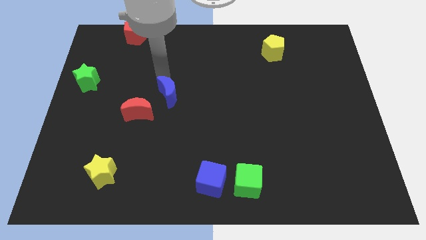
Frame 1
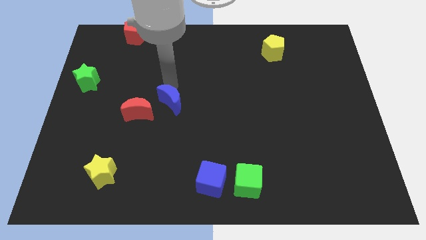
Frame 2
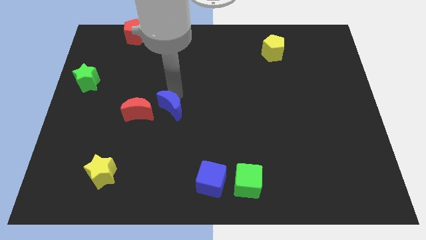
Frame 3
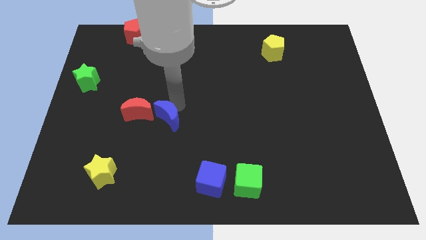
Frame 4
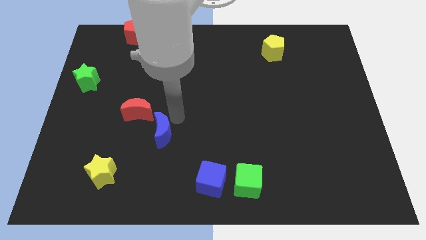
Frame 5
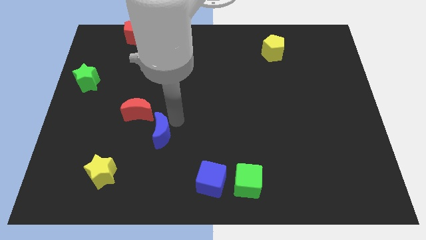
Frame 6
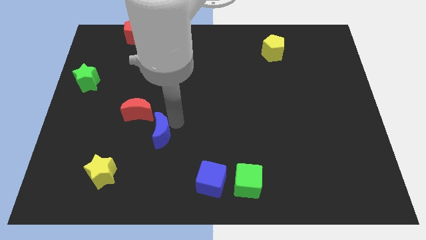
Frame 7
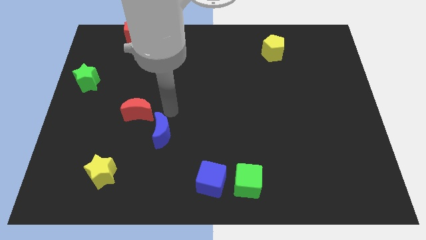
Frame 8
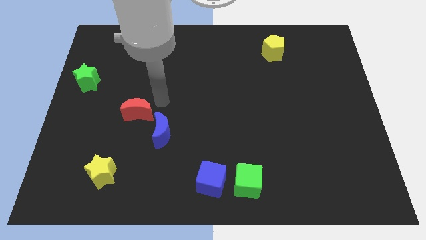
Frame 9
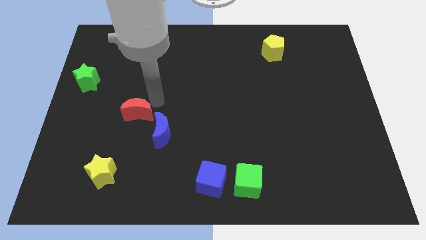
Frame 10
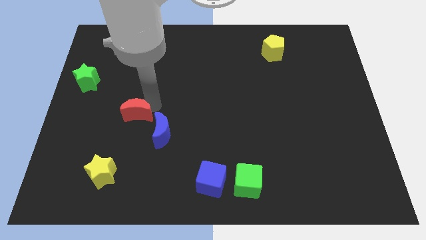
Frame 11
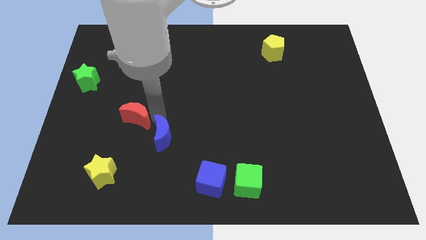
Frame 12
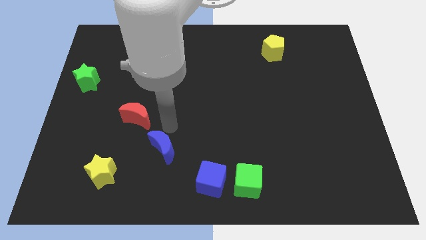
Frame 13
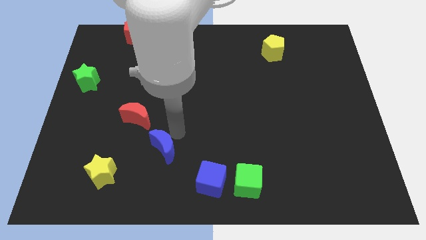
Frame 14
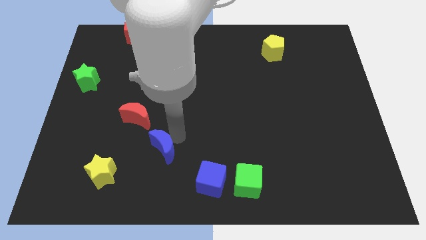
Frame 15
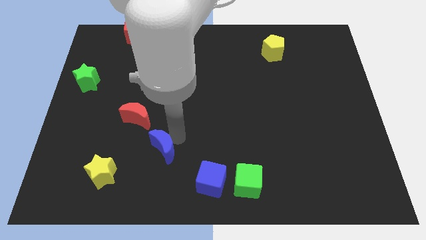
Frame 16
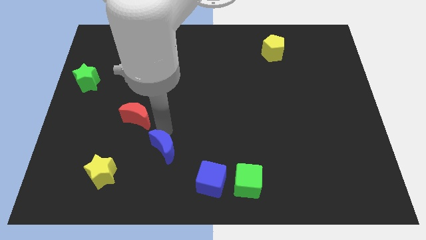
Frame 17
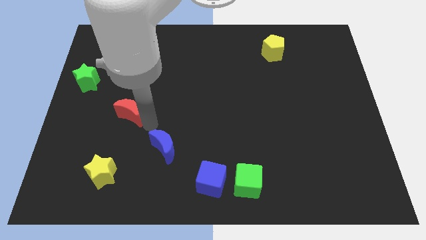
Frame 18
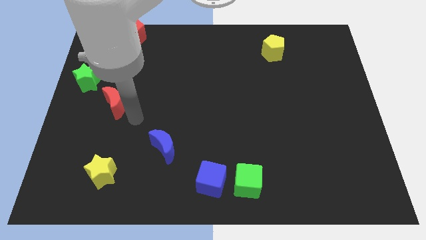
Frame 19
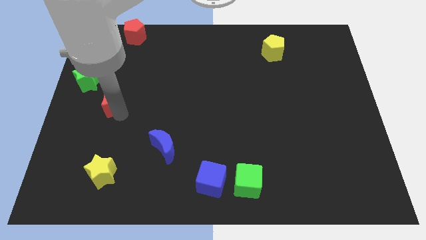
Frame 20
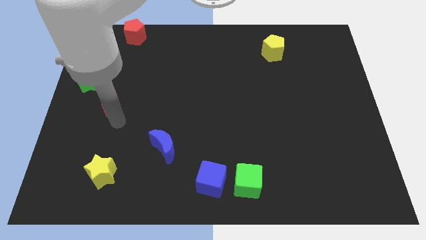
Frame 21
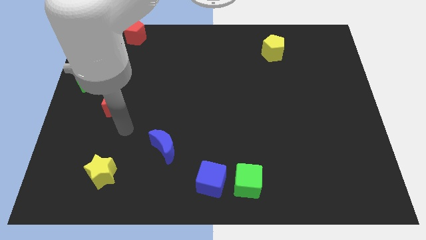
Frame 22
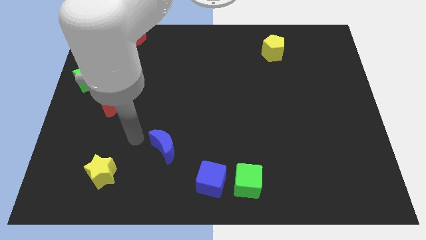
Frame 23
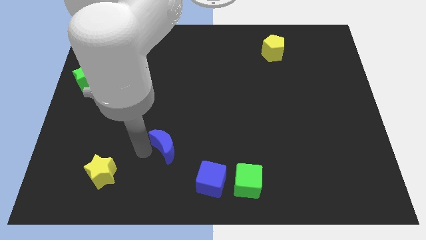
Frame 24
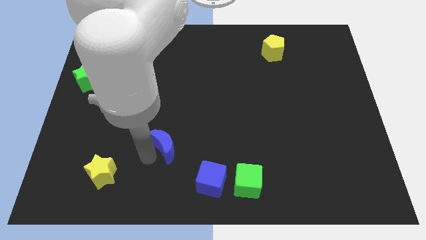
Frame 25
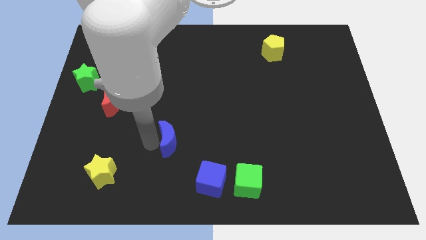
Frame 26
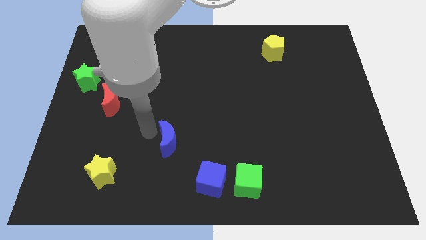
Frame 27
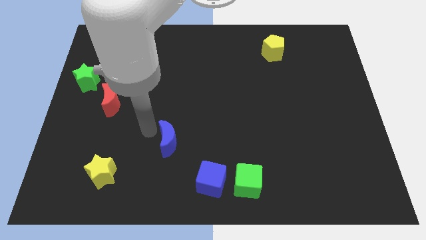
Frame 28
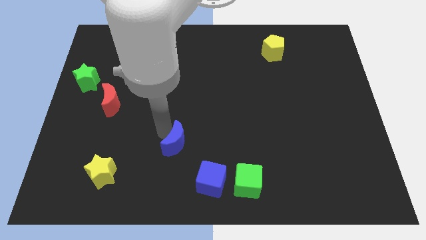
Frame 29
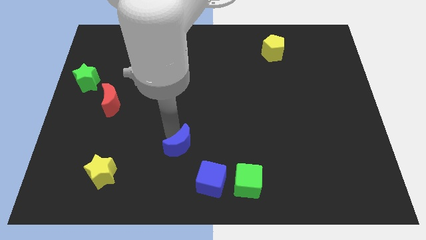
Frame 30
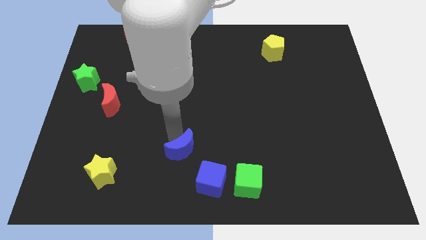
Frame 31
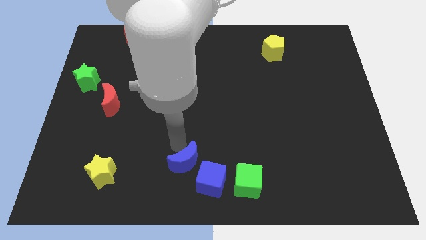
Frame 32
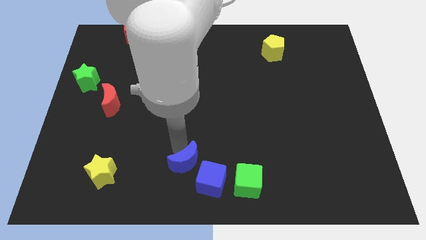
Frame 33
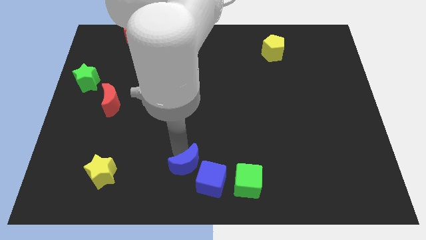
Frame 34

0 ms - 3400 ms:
push the red moon and the blue moon diagonal to each other

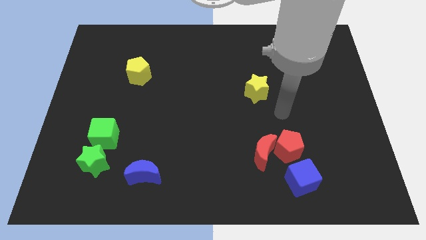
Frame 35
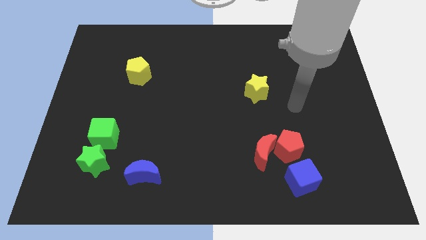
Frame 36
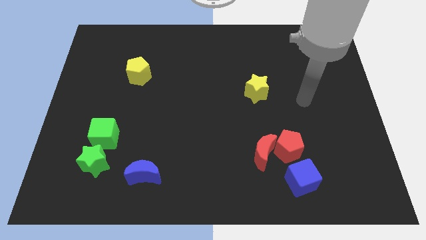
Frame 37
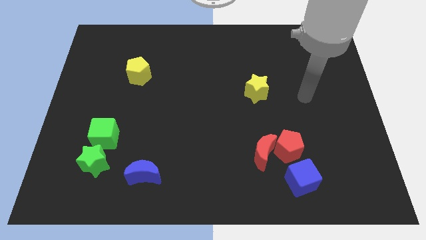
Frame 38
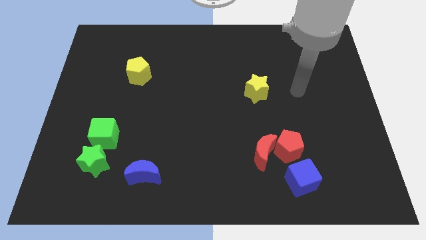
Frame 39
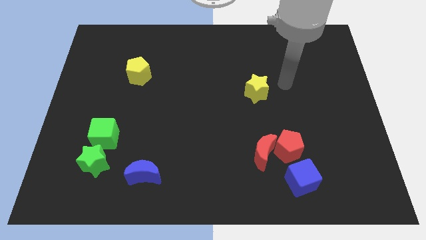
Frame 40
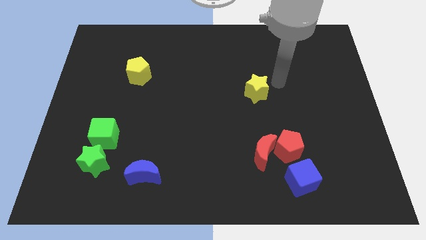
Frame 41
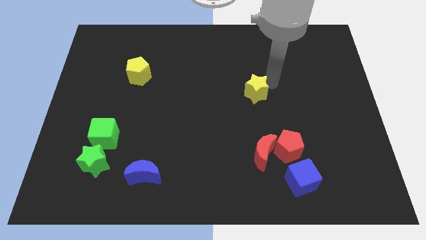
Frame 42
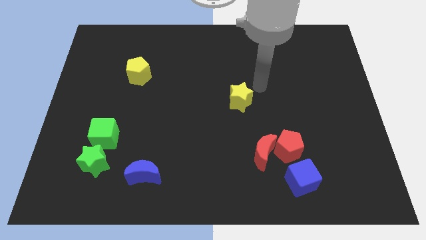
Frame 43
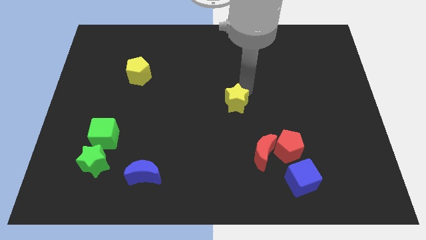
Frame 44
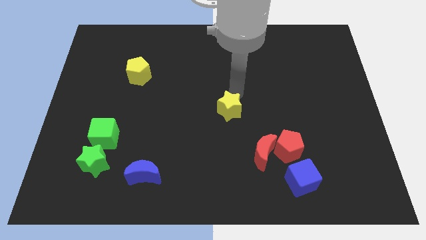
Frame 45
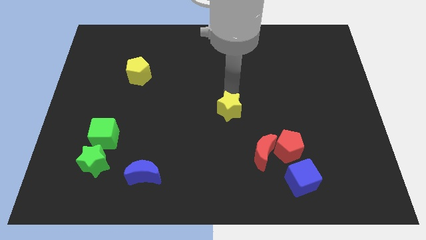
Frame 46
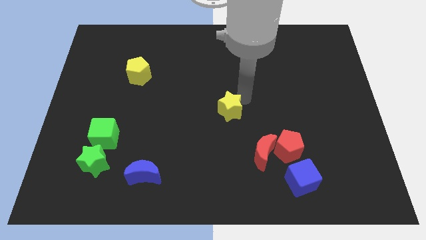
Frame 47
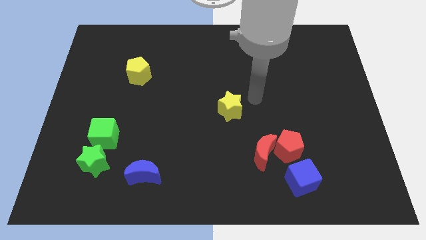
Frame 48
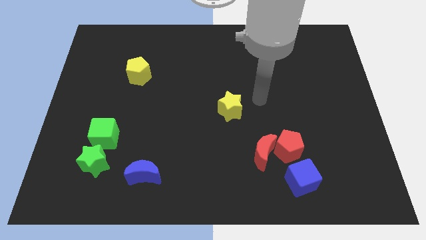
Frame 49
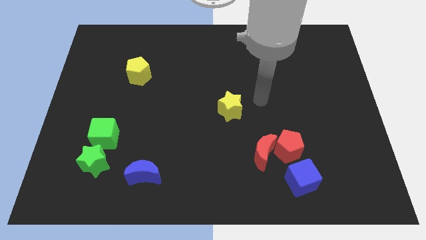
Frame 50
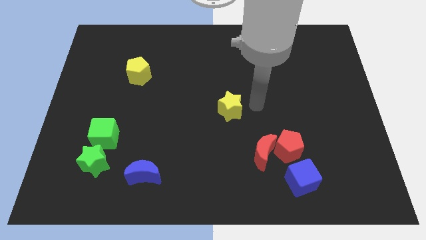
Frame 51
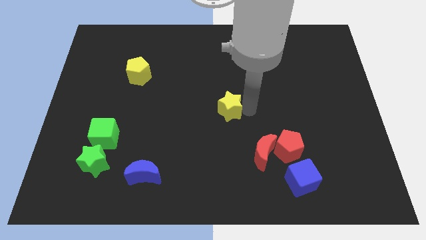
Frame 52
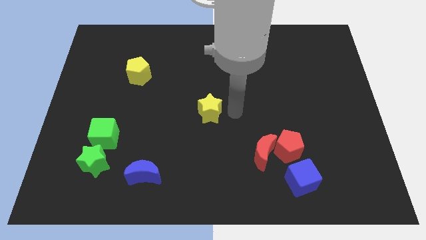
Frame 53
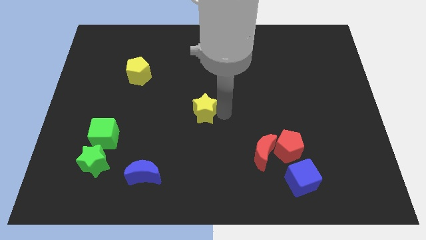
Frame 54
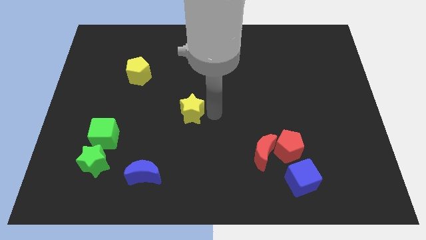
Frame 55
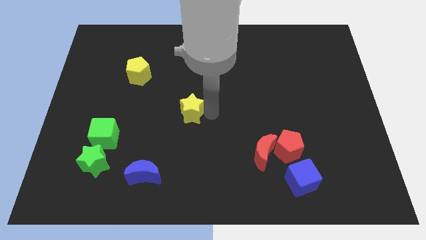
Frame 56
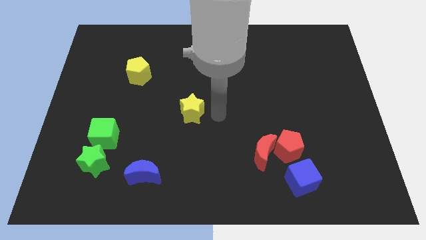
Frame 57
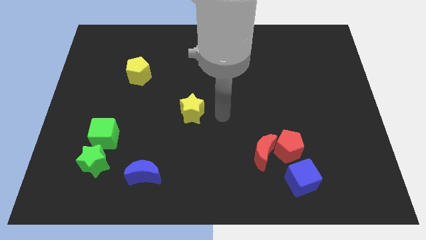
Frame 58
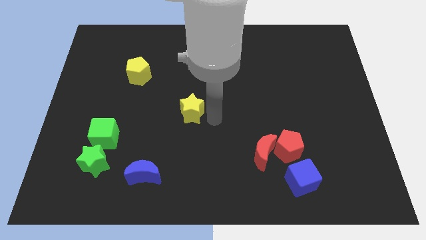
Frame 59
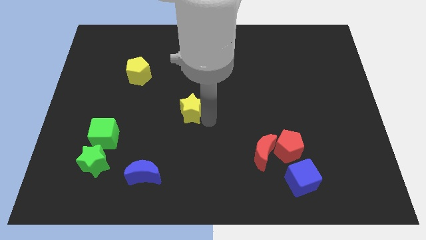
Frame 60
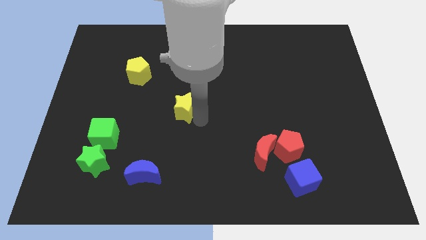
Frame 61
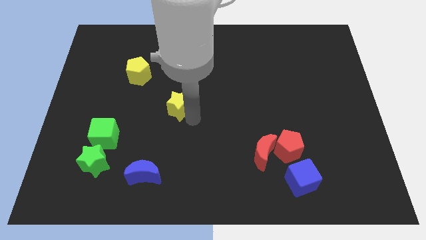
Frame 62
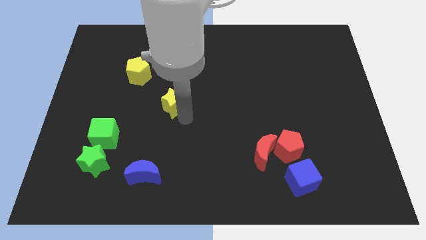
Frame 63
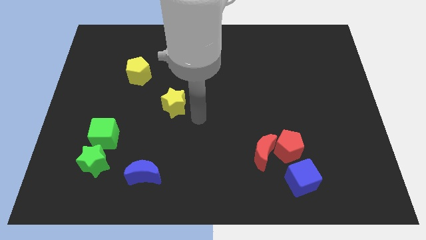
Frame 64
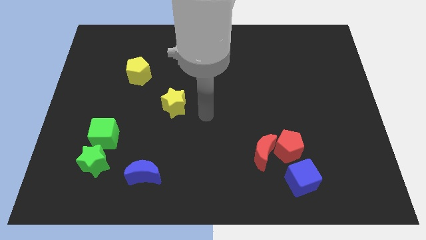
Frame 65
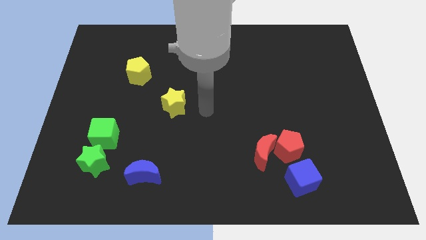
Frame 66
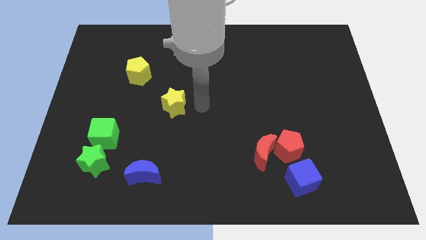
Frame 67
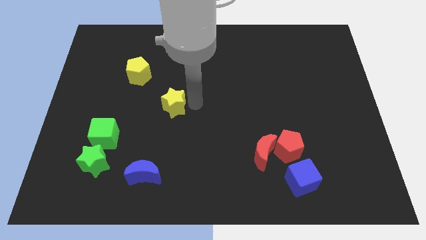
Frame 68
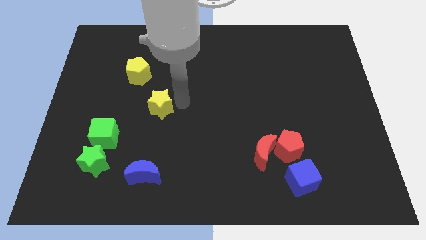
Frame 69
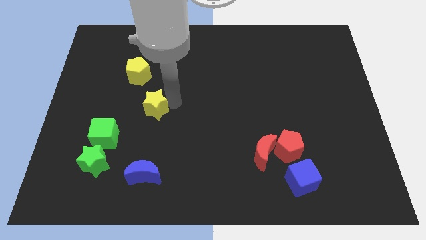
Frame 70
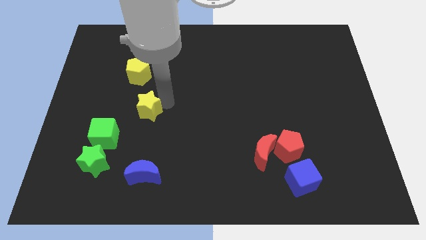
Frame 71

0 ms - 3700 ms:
place the yellow star vertically above the blue moon

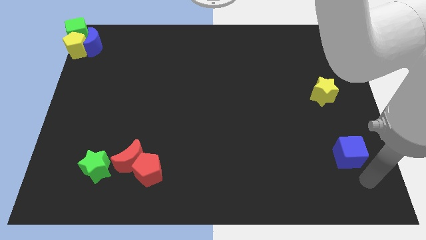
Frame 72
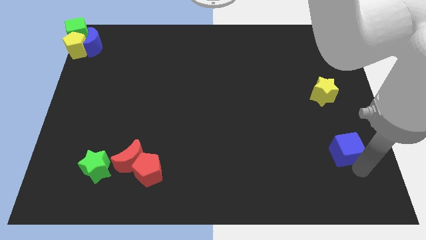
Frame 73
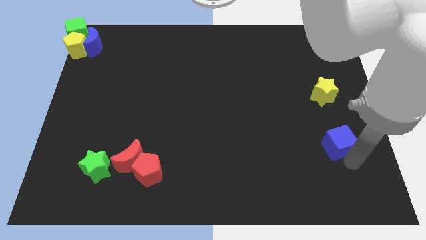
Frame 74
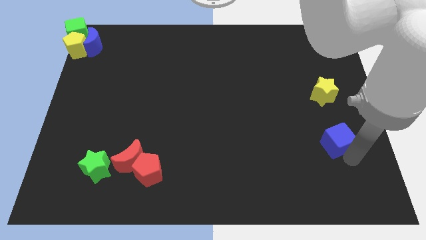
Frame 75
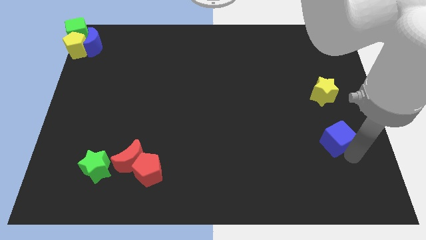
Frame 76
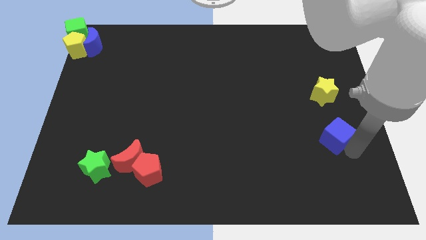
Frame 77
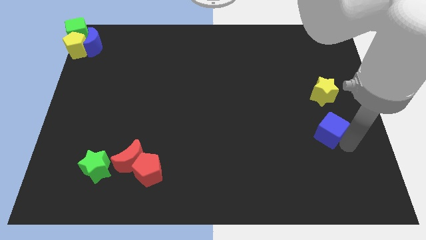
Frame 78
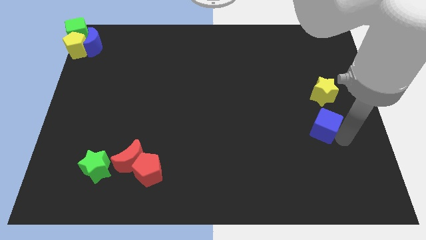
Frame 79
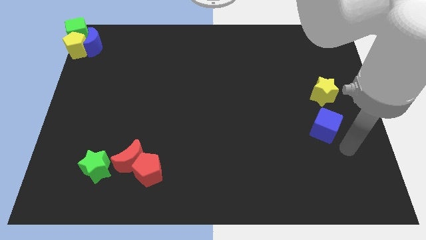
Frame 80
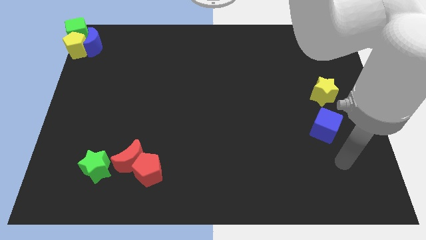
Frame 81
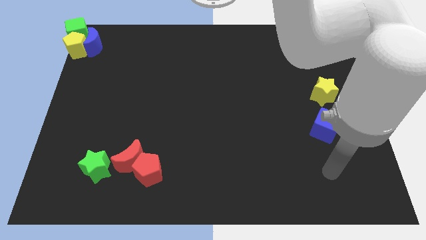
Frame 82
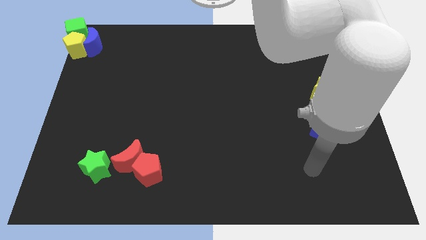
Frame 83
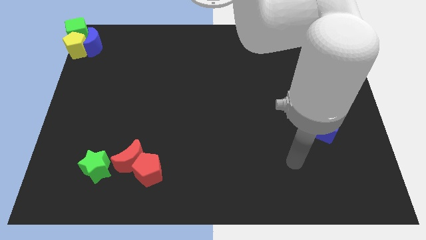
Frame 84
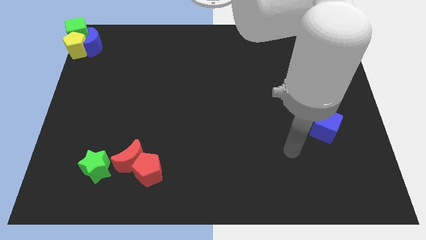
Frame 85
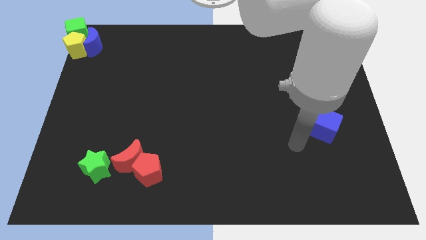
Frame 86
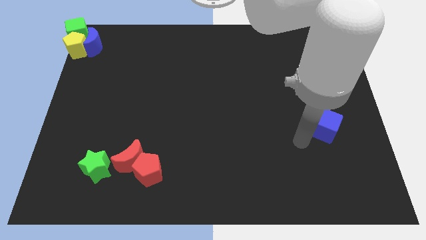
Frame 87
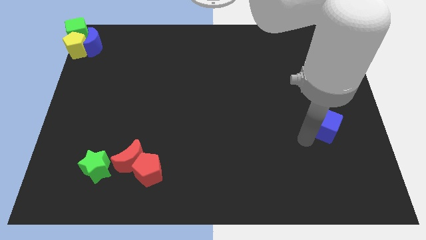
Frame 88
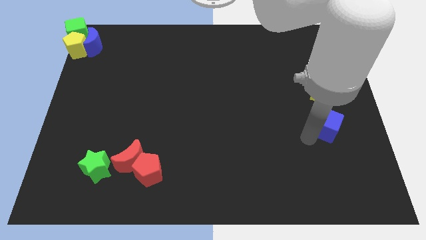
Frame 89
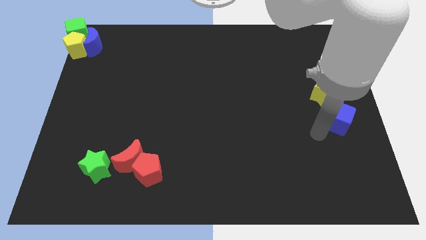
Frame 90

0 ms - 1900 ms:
move the blue cube close to the yellow star
